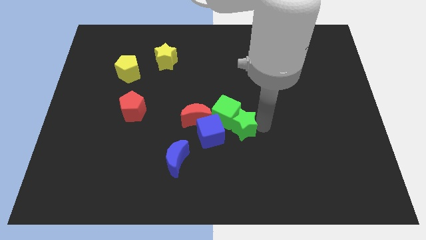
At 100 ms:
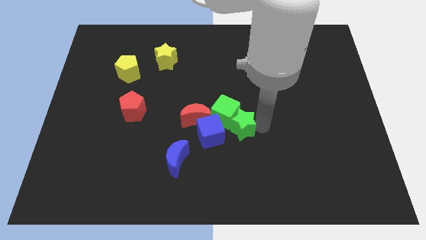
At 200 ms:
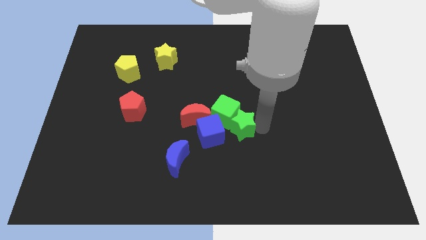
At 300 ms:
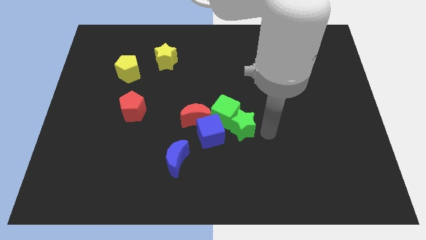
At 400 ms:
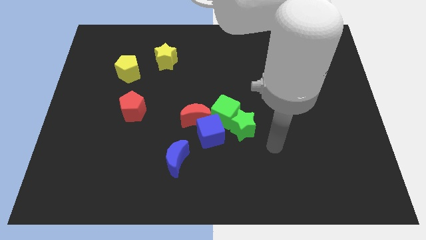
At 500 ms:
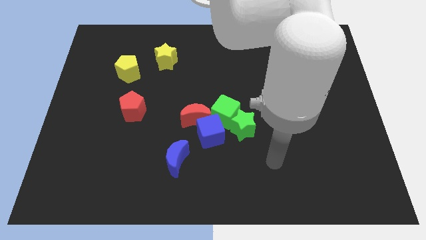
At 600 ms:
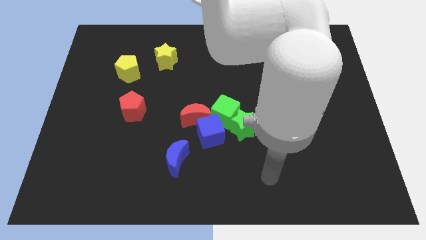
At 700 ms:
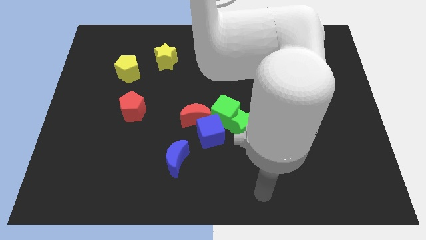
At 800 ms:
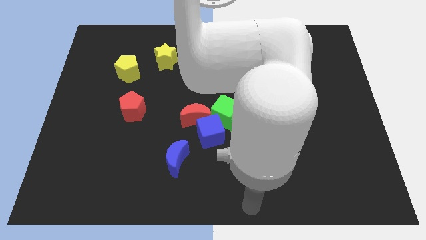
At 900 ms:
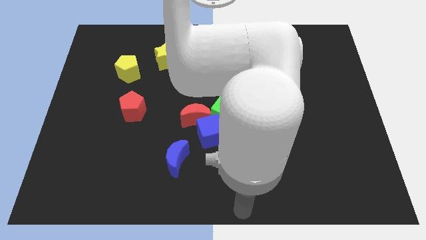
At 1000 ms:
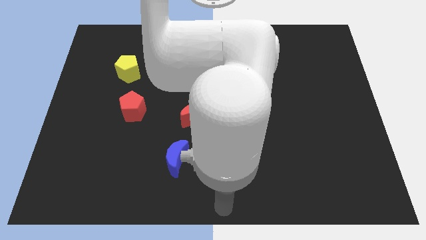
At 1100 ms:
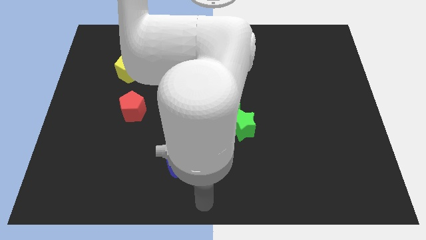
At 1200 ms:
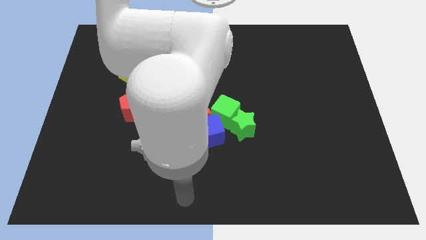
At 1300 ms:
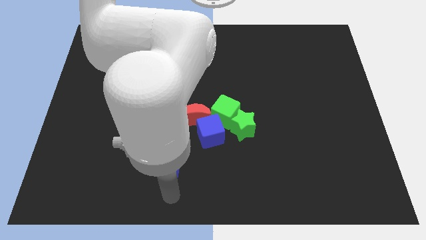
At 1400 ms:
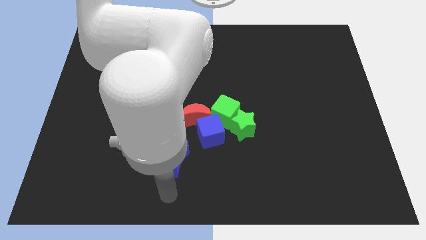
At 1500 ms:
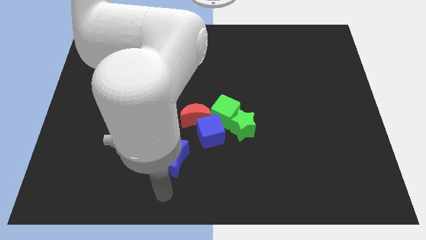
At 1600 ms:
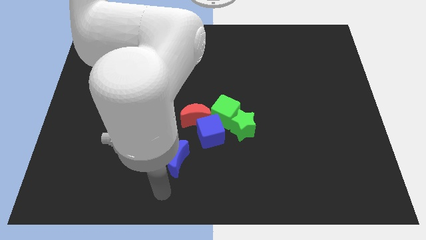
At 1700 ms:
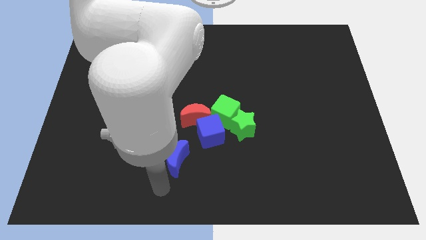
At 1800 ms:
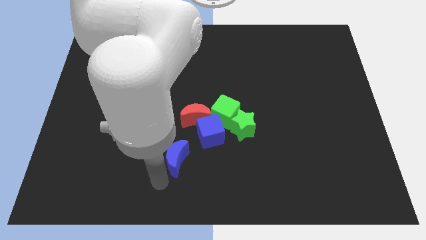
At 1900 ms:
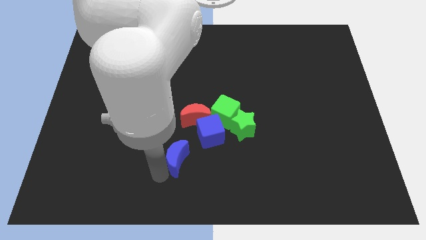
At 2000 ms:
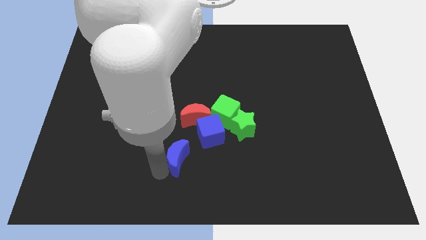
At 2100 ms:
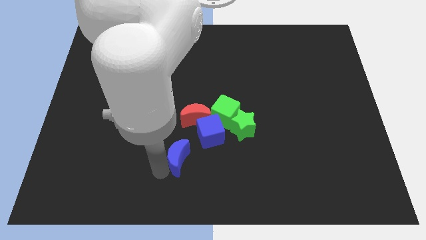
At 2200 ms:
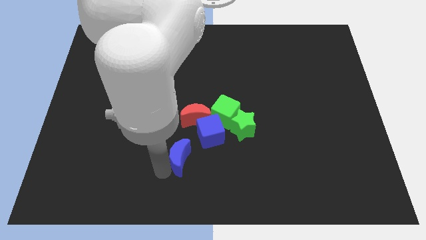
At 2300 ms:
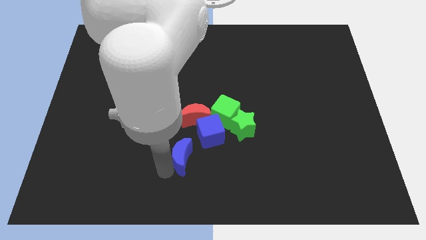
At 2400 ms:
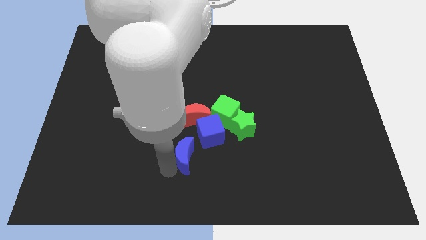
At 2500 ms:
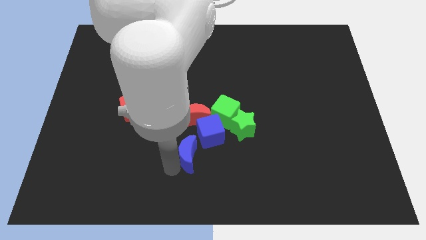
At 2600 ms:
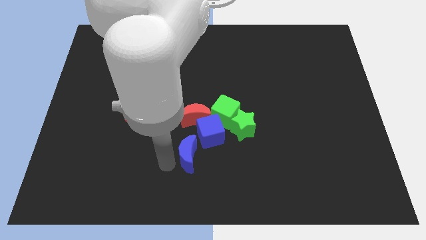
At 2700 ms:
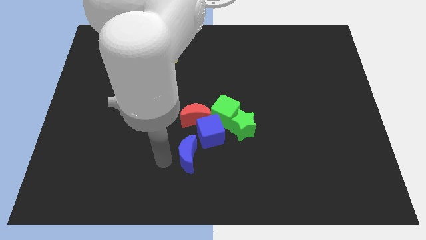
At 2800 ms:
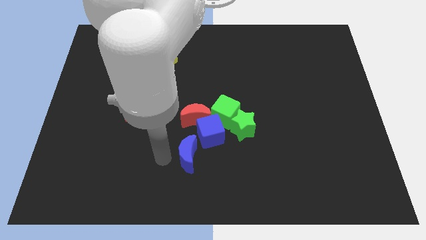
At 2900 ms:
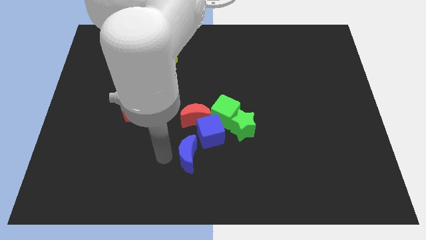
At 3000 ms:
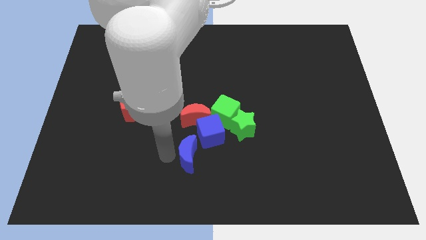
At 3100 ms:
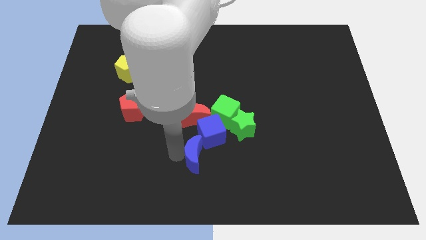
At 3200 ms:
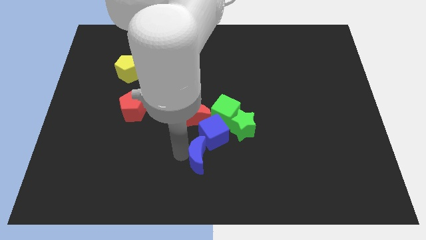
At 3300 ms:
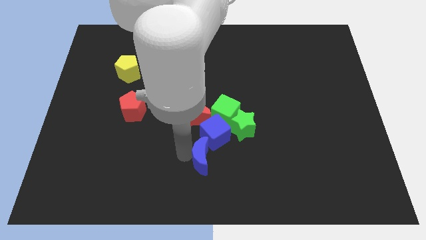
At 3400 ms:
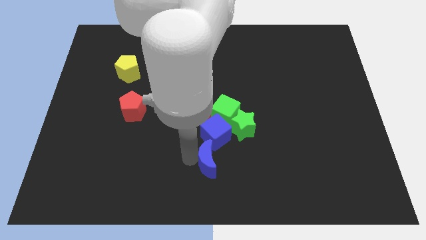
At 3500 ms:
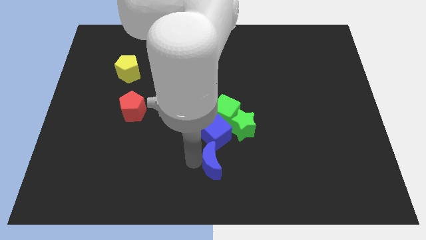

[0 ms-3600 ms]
move the blue moon into blue cube

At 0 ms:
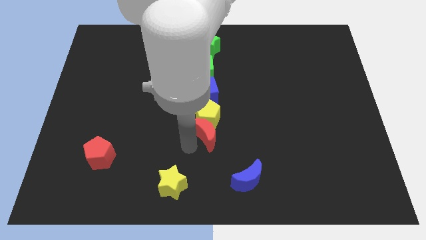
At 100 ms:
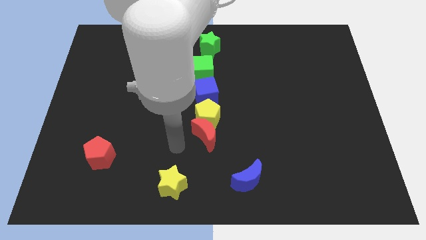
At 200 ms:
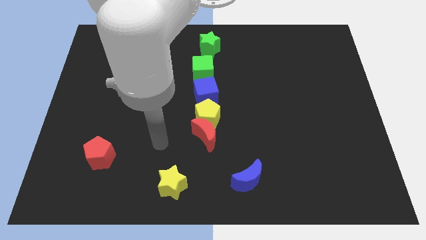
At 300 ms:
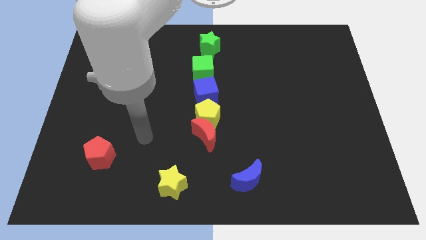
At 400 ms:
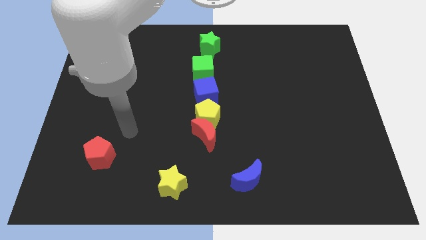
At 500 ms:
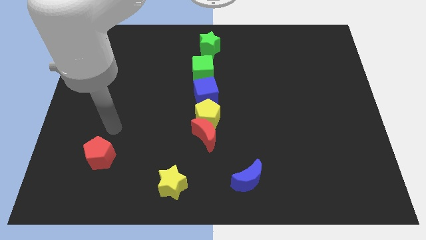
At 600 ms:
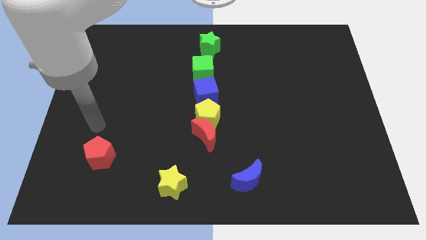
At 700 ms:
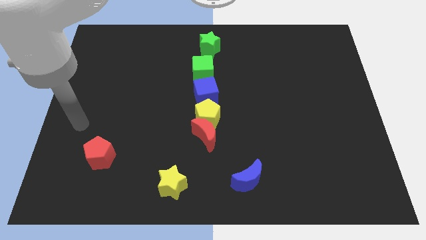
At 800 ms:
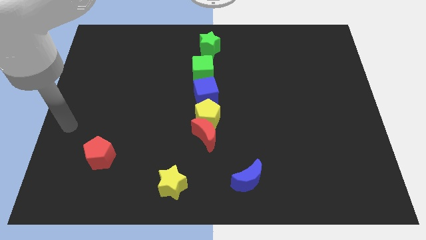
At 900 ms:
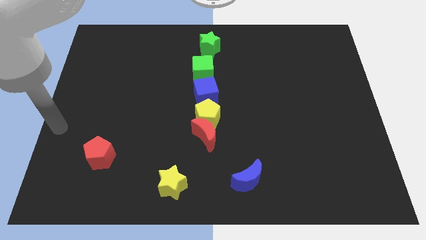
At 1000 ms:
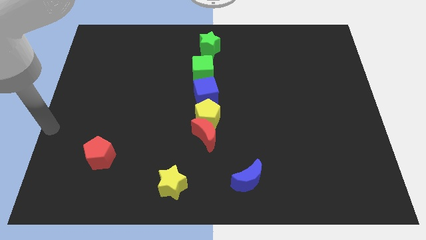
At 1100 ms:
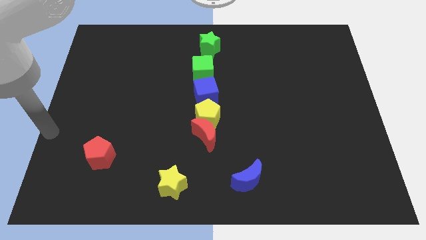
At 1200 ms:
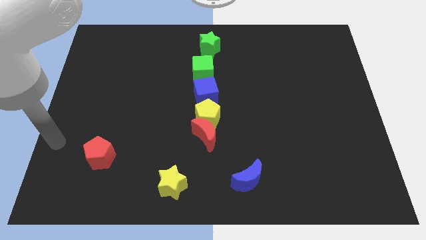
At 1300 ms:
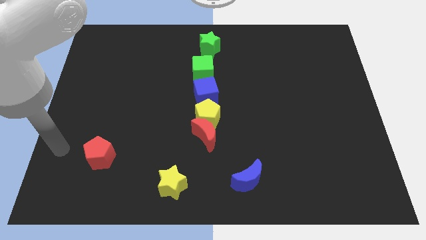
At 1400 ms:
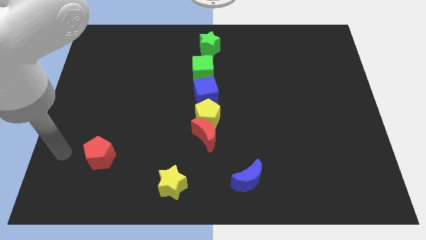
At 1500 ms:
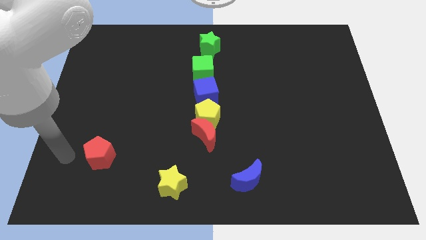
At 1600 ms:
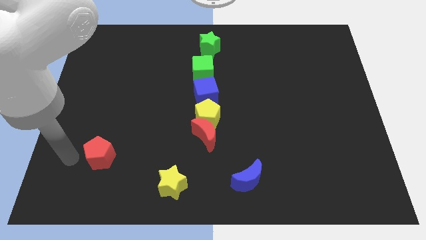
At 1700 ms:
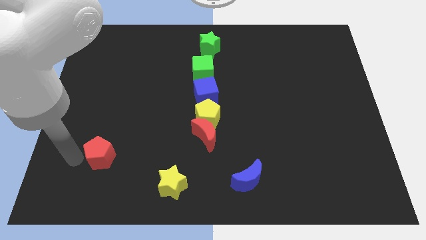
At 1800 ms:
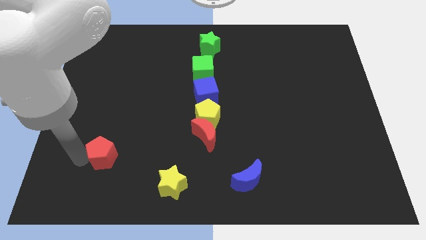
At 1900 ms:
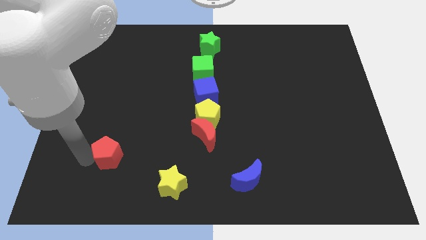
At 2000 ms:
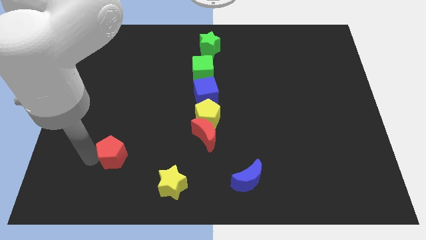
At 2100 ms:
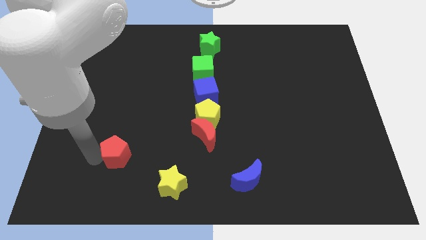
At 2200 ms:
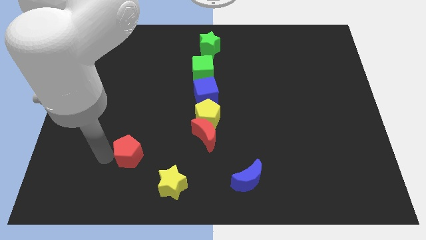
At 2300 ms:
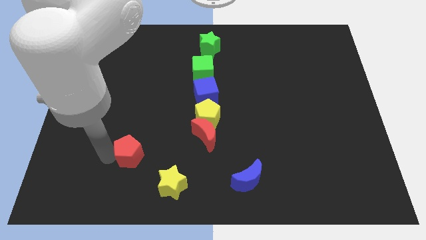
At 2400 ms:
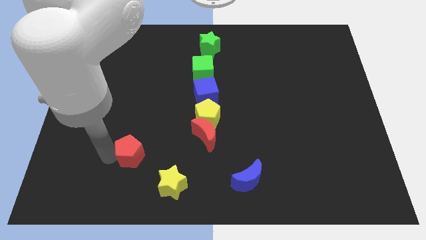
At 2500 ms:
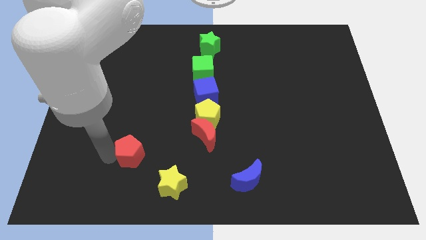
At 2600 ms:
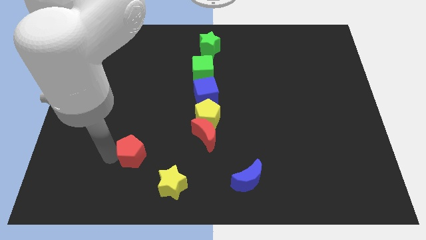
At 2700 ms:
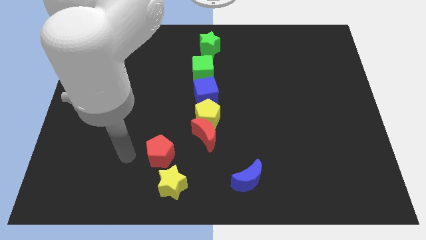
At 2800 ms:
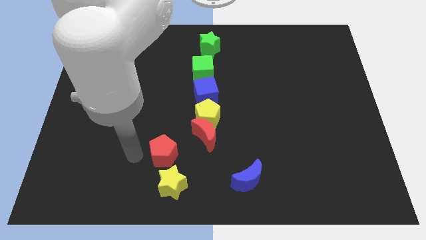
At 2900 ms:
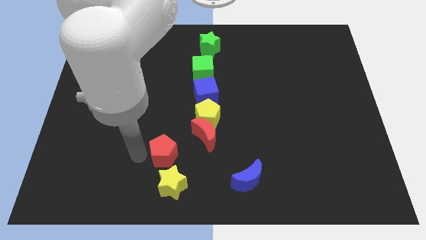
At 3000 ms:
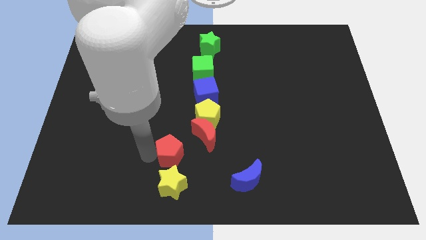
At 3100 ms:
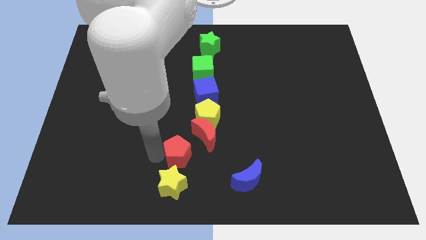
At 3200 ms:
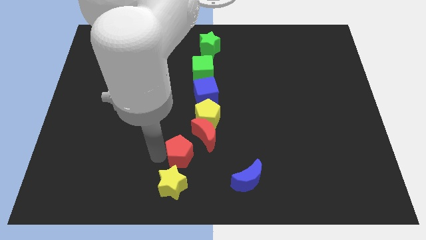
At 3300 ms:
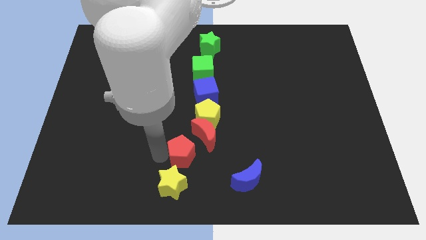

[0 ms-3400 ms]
move the red pentagon slightly right

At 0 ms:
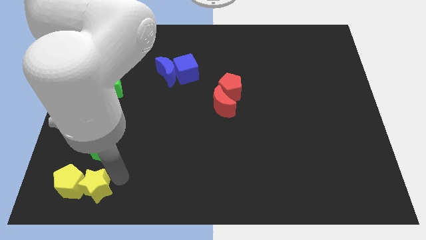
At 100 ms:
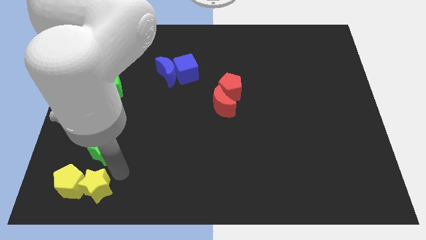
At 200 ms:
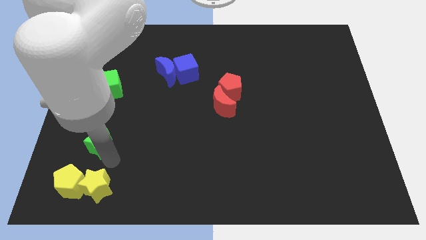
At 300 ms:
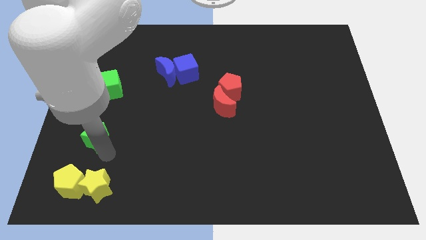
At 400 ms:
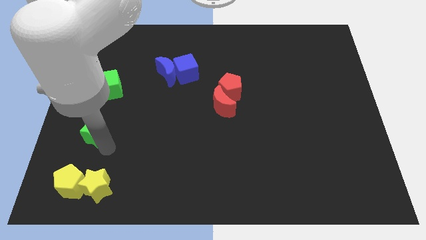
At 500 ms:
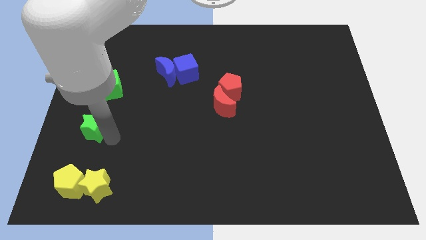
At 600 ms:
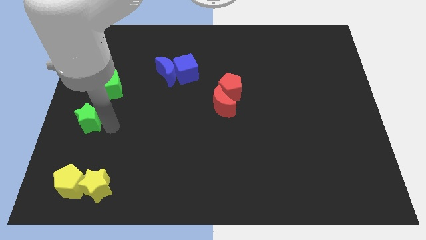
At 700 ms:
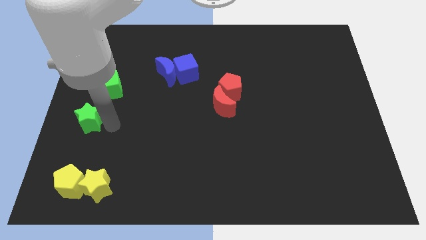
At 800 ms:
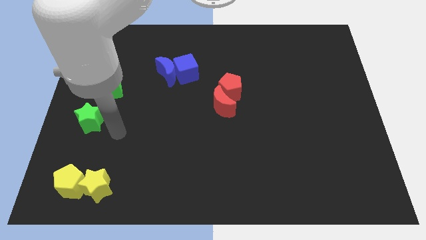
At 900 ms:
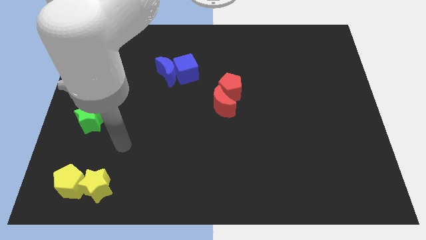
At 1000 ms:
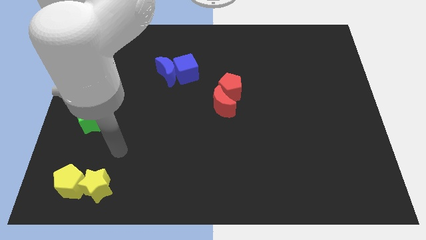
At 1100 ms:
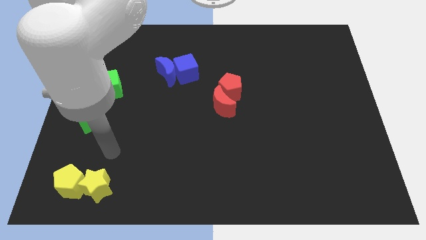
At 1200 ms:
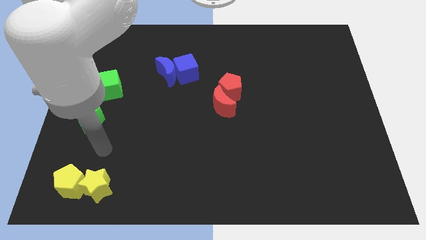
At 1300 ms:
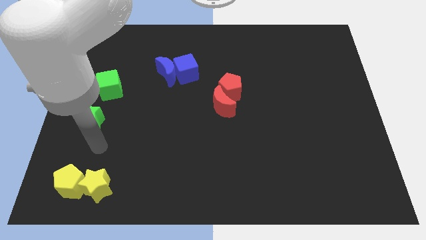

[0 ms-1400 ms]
move the green star slightly upwards

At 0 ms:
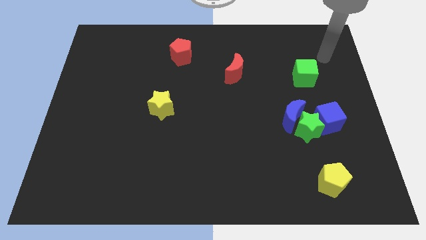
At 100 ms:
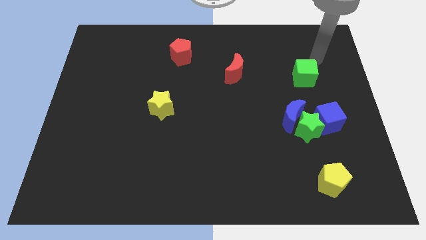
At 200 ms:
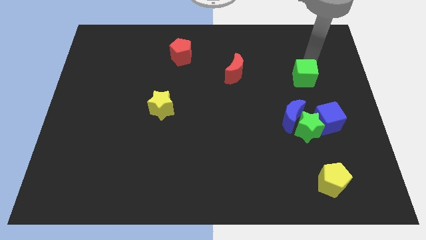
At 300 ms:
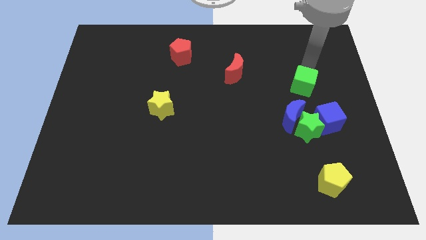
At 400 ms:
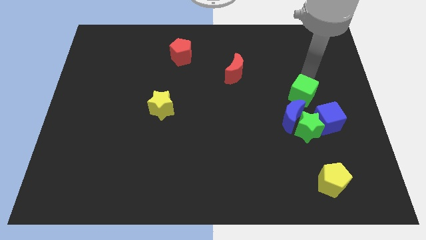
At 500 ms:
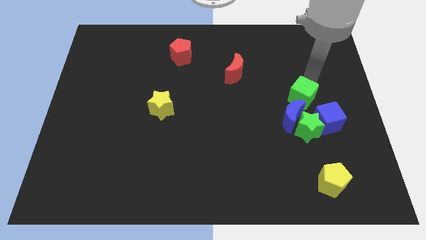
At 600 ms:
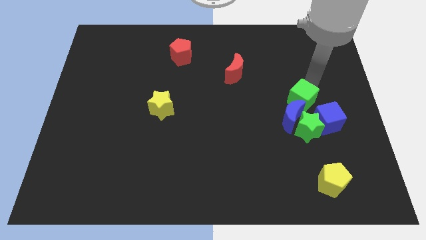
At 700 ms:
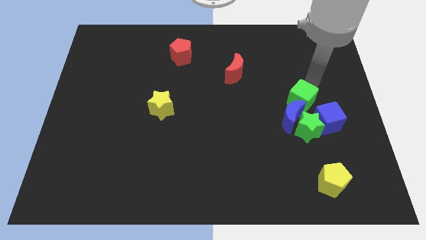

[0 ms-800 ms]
place green cube to the top of blue crescent
